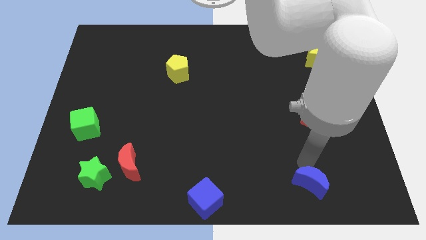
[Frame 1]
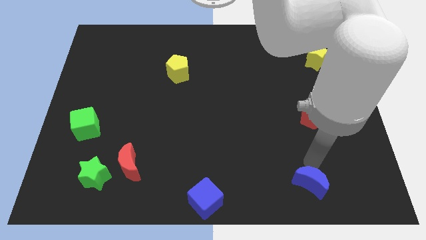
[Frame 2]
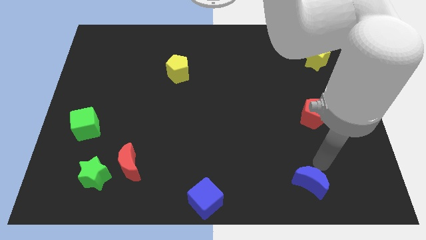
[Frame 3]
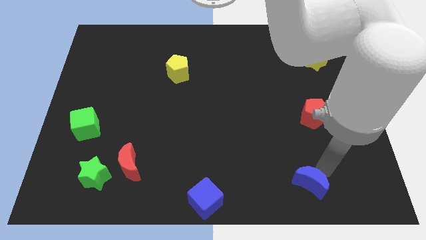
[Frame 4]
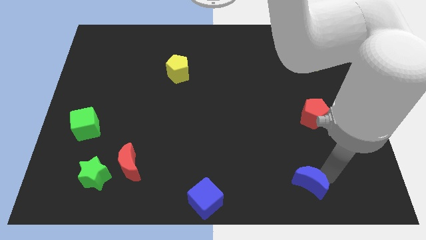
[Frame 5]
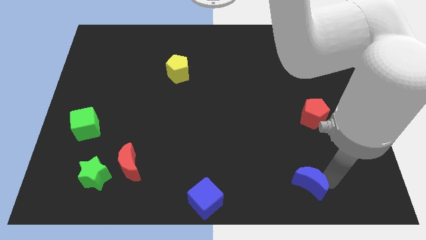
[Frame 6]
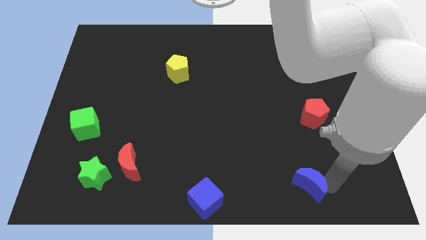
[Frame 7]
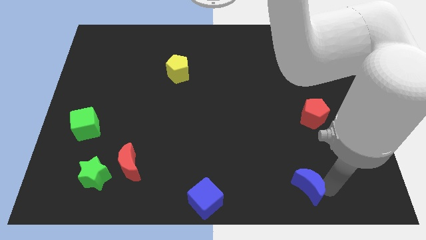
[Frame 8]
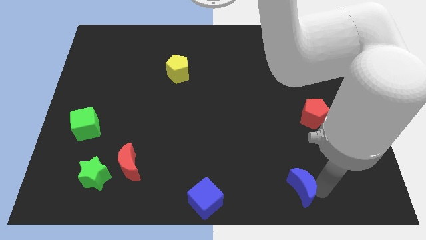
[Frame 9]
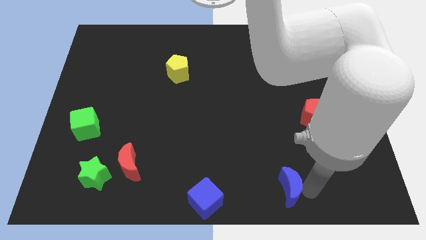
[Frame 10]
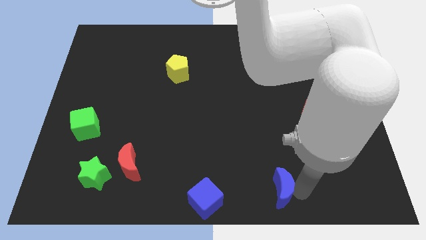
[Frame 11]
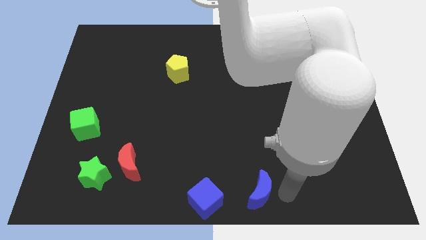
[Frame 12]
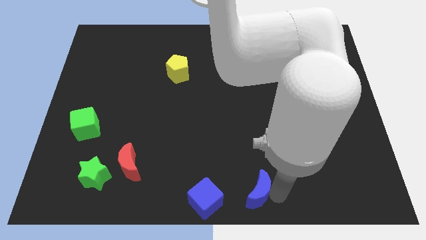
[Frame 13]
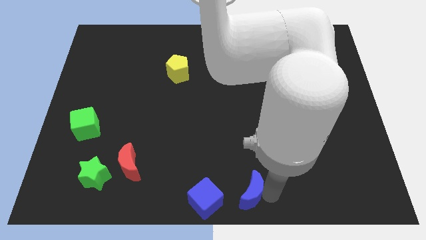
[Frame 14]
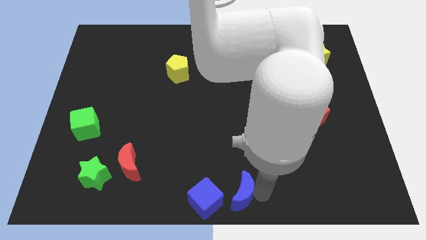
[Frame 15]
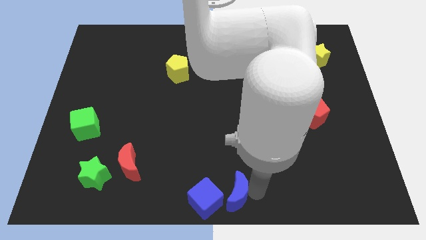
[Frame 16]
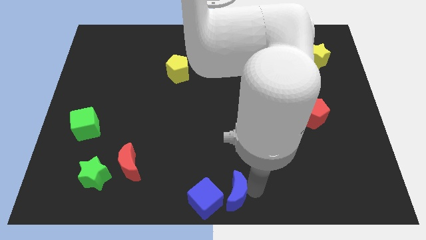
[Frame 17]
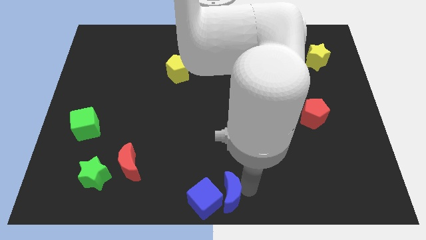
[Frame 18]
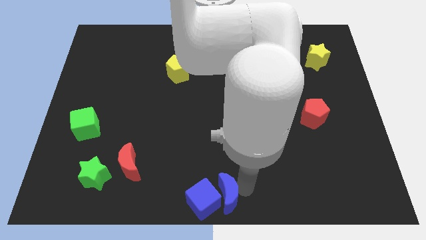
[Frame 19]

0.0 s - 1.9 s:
push the blue moon to the right of blue cube

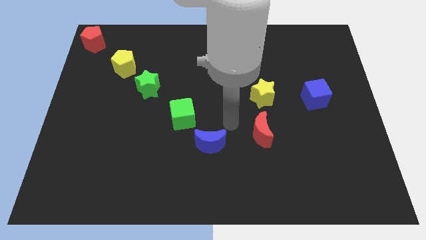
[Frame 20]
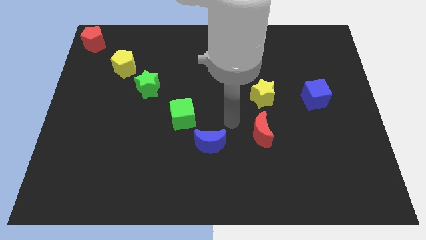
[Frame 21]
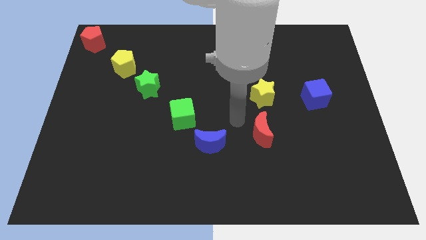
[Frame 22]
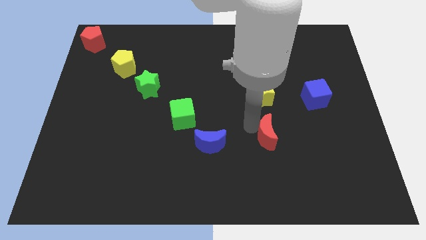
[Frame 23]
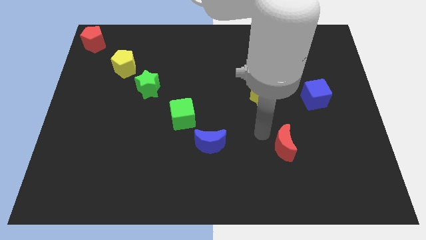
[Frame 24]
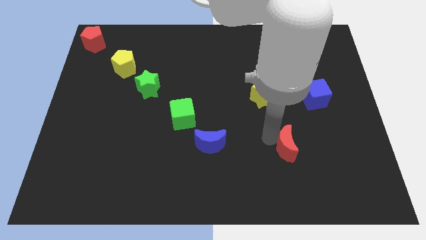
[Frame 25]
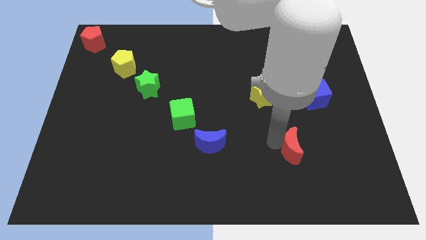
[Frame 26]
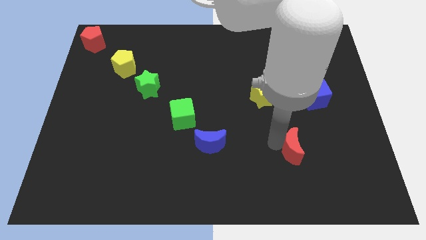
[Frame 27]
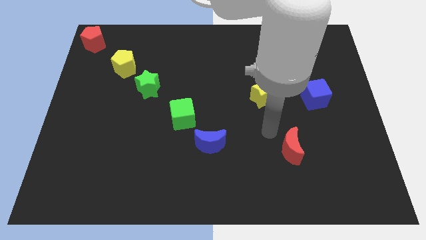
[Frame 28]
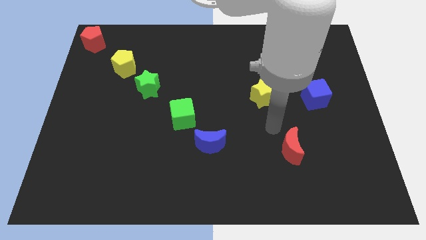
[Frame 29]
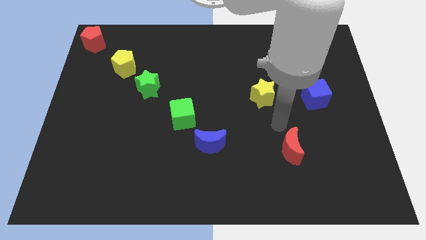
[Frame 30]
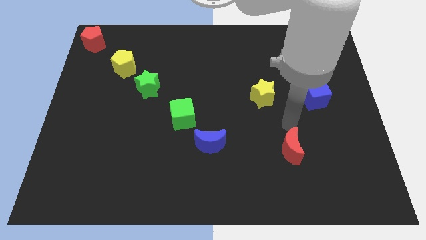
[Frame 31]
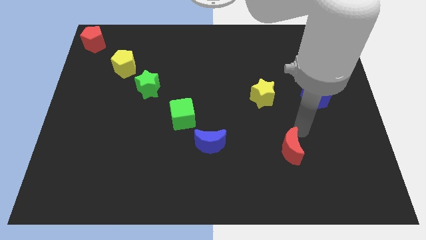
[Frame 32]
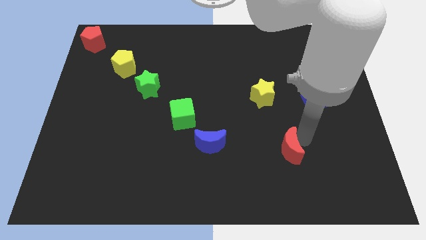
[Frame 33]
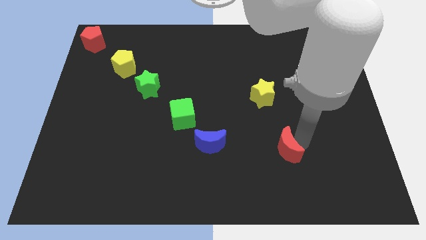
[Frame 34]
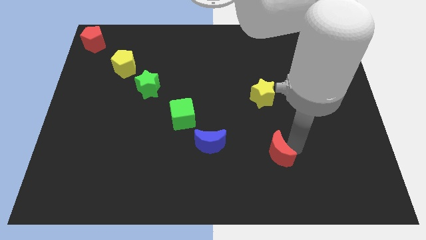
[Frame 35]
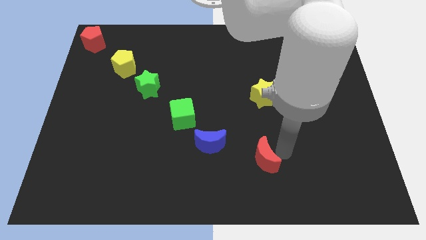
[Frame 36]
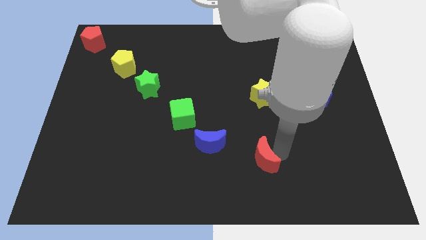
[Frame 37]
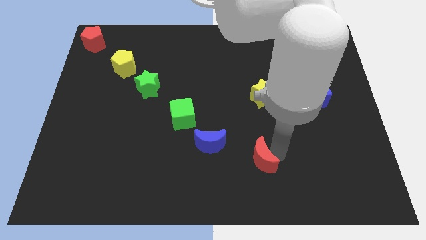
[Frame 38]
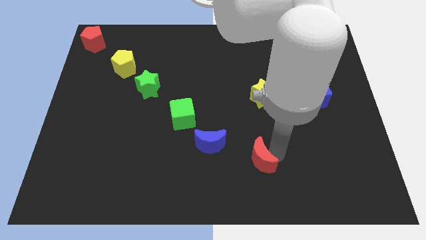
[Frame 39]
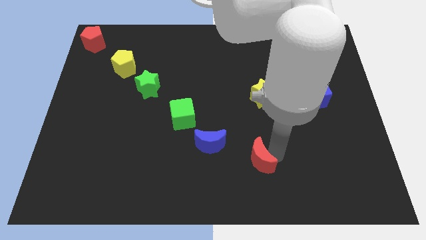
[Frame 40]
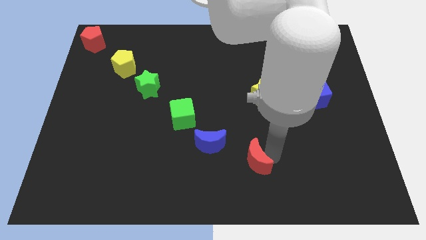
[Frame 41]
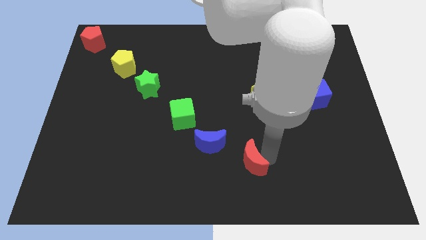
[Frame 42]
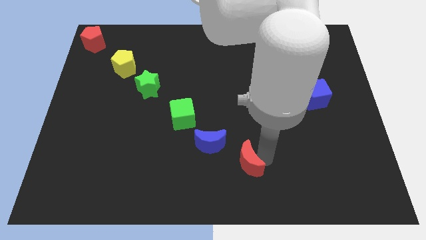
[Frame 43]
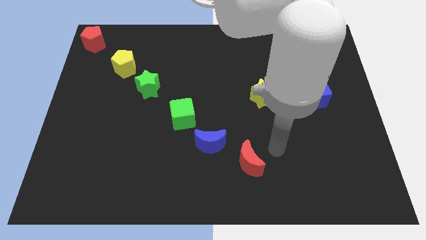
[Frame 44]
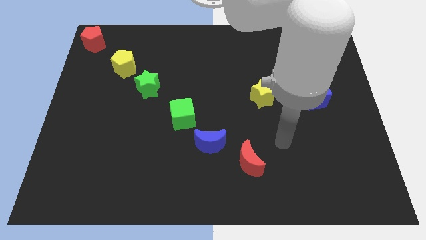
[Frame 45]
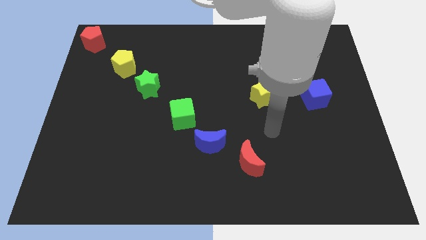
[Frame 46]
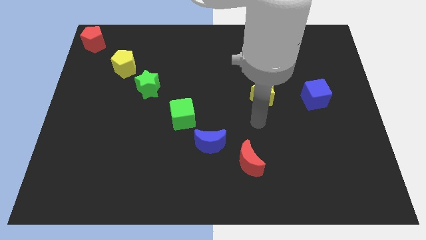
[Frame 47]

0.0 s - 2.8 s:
move the red crescent to the bottom right of the blue crescent

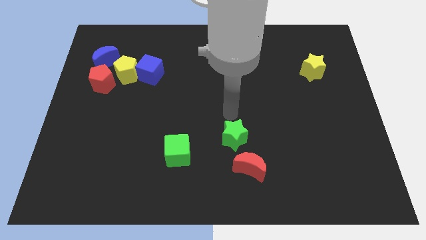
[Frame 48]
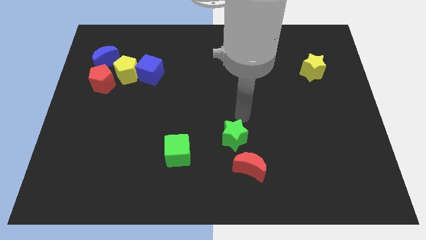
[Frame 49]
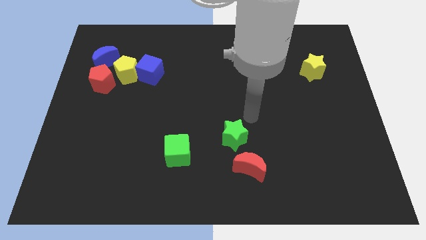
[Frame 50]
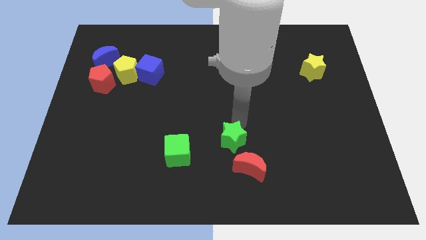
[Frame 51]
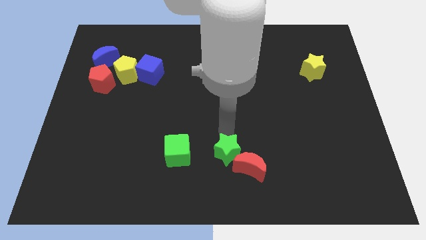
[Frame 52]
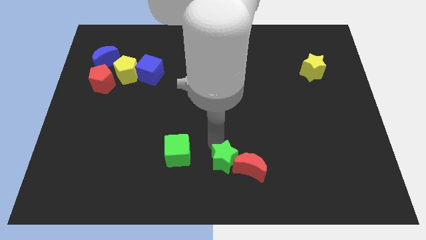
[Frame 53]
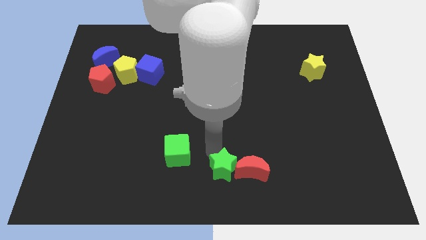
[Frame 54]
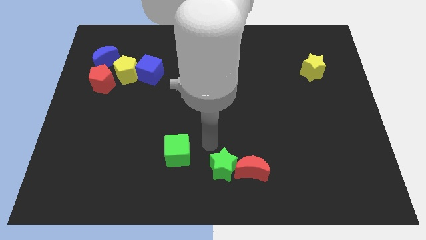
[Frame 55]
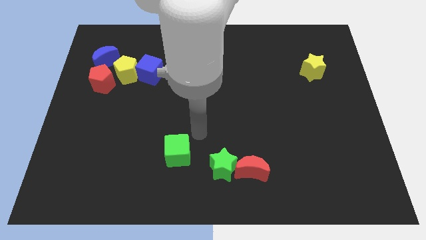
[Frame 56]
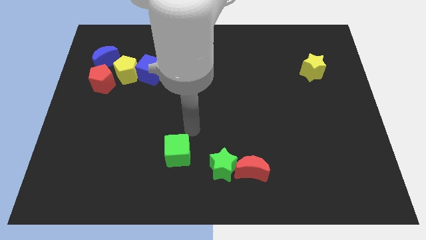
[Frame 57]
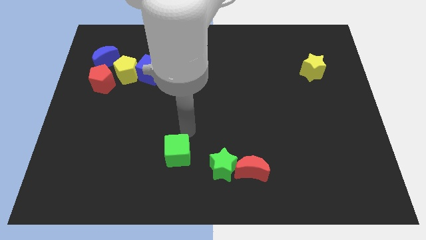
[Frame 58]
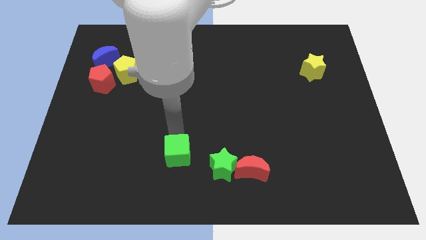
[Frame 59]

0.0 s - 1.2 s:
move the green star left to the red crescent

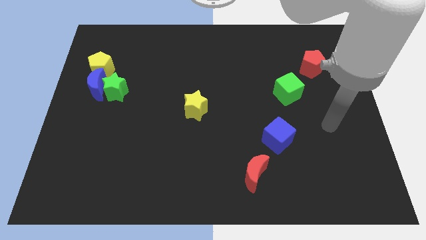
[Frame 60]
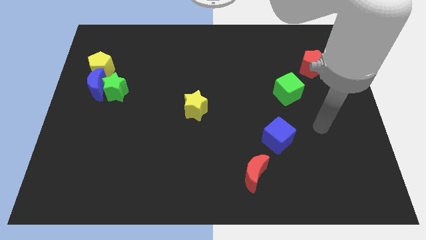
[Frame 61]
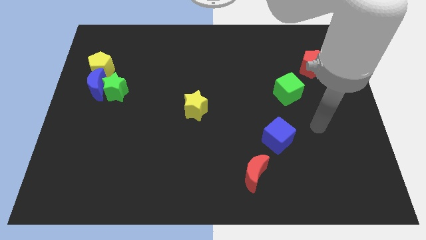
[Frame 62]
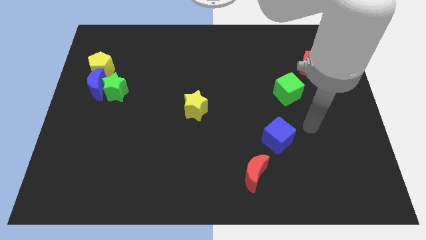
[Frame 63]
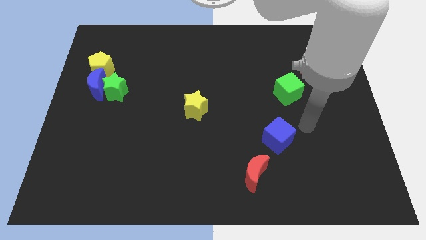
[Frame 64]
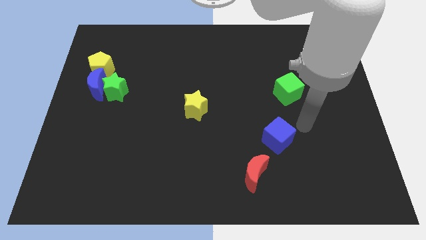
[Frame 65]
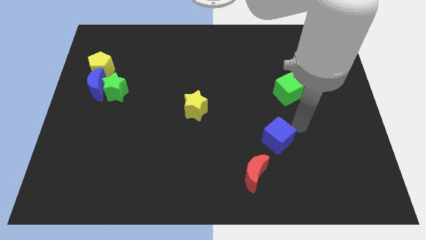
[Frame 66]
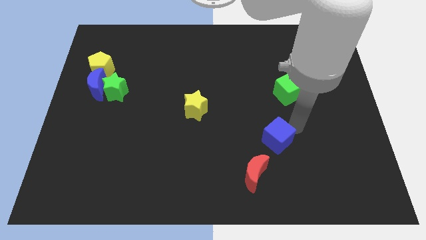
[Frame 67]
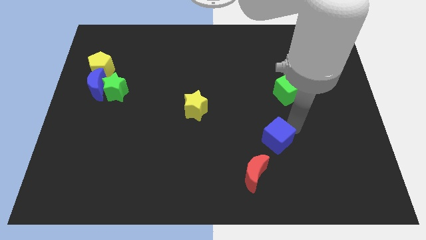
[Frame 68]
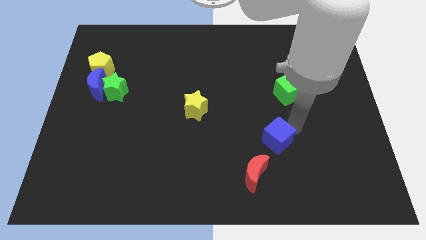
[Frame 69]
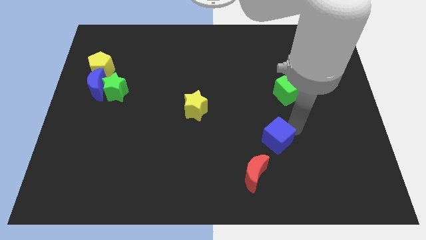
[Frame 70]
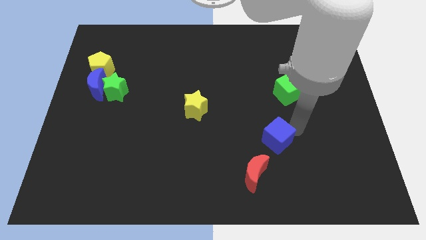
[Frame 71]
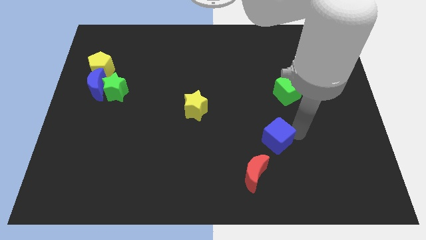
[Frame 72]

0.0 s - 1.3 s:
point your arm right to blue cube

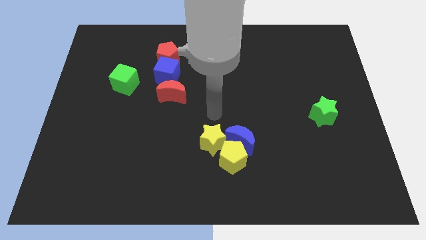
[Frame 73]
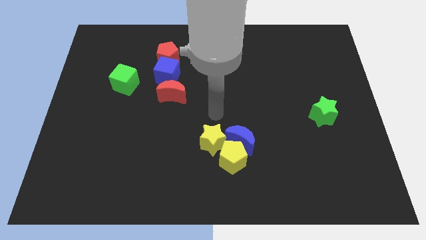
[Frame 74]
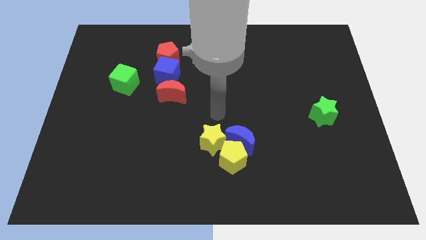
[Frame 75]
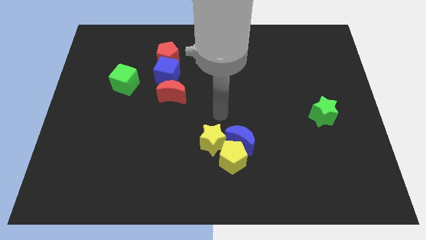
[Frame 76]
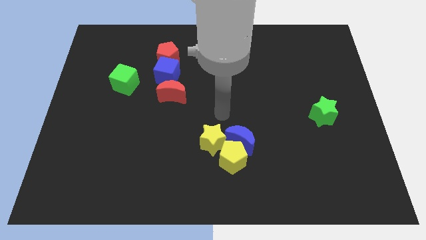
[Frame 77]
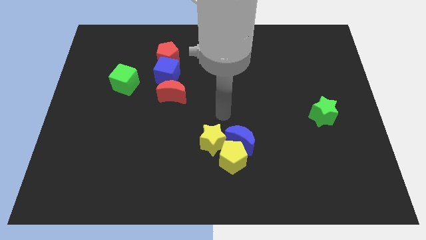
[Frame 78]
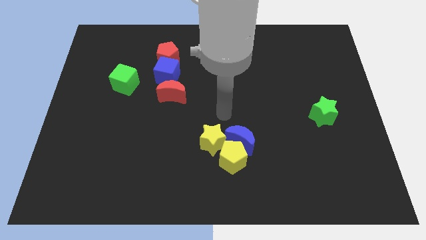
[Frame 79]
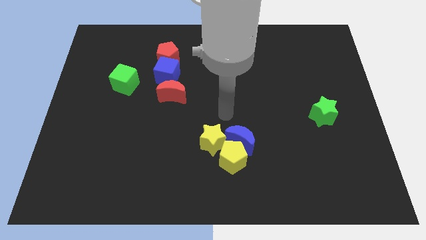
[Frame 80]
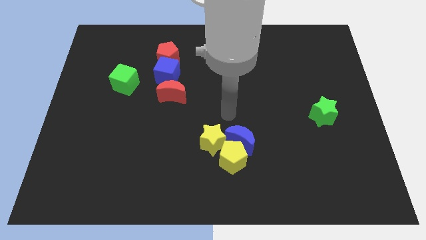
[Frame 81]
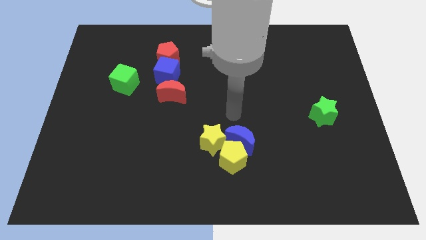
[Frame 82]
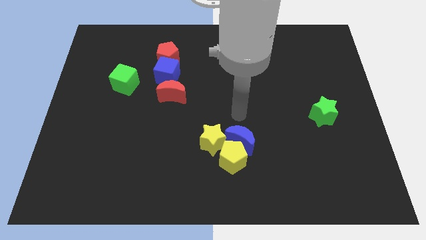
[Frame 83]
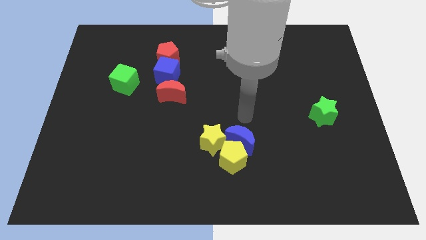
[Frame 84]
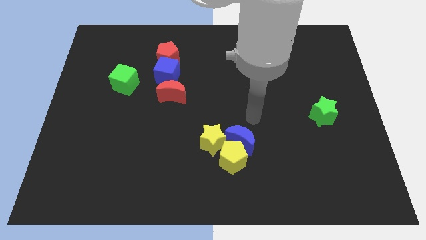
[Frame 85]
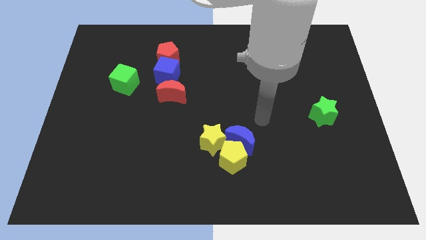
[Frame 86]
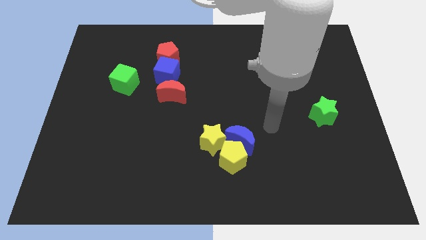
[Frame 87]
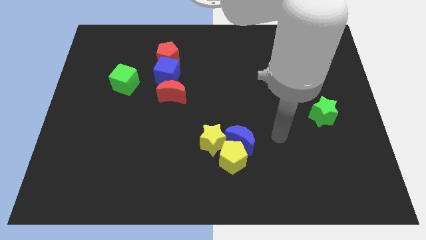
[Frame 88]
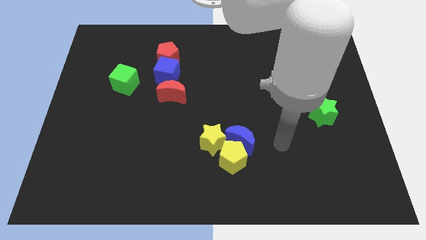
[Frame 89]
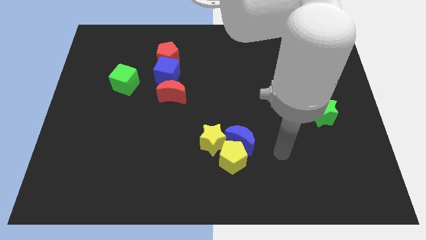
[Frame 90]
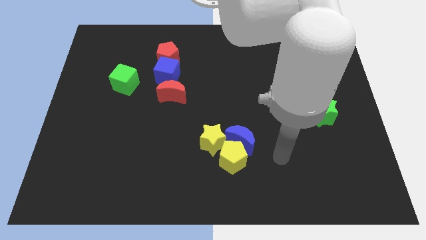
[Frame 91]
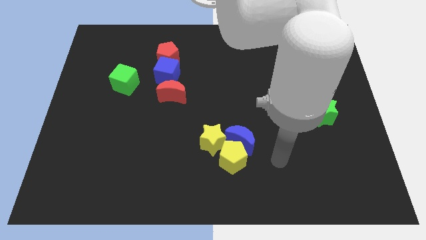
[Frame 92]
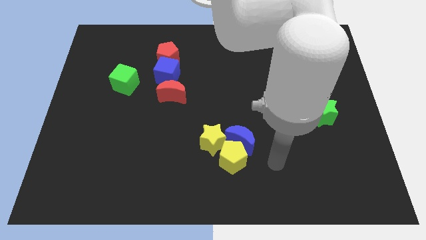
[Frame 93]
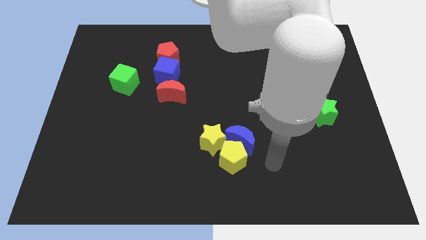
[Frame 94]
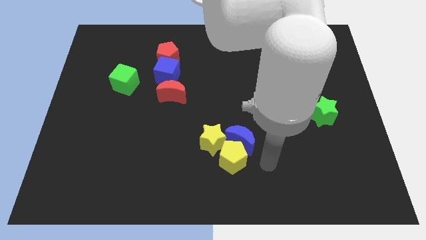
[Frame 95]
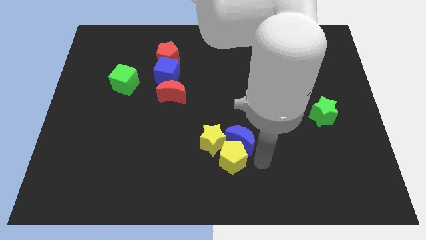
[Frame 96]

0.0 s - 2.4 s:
point the arm to the right of the yellow pentagon
